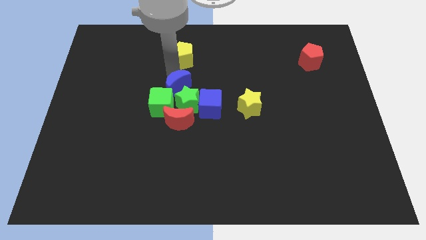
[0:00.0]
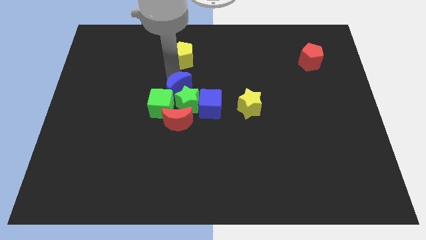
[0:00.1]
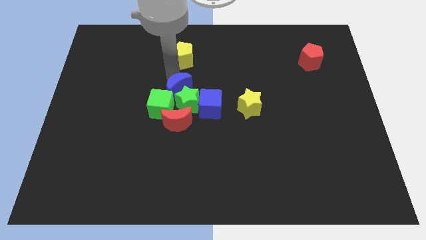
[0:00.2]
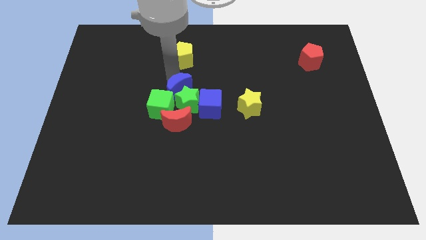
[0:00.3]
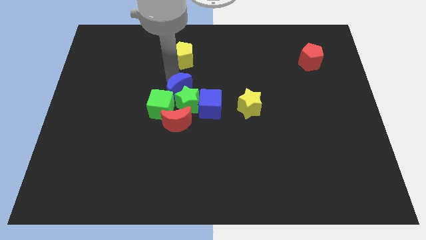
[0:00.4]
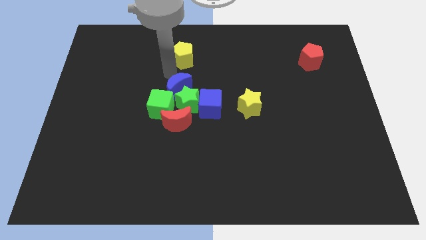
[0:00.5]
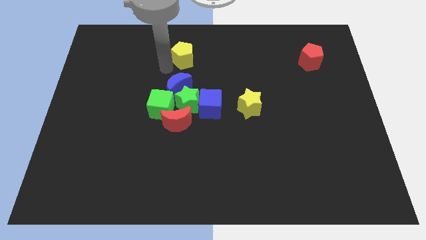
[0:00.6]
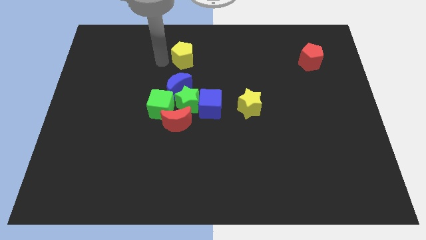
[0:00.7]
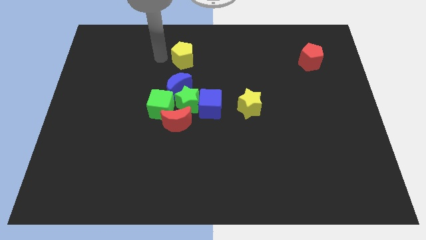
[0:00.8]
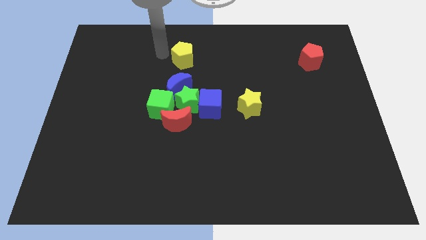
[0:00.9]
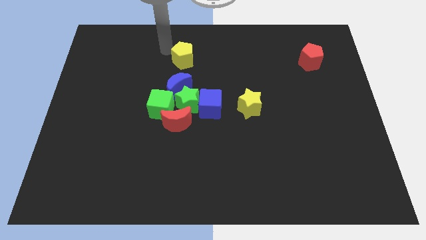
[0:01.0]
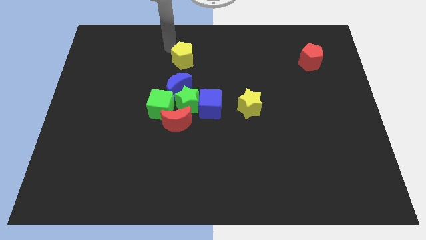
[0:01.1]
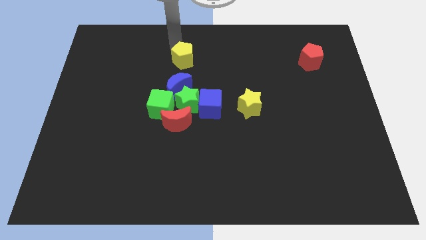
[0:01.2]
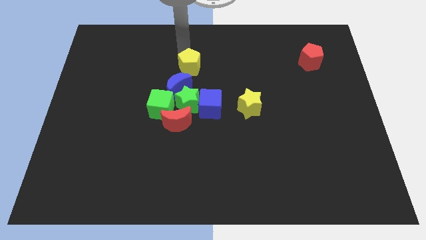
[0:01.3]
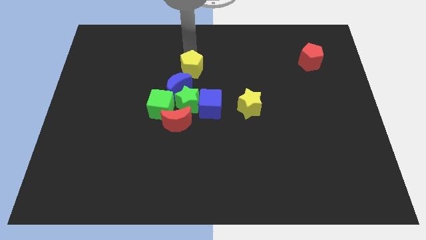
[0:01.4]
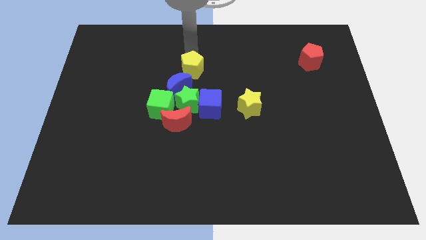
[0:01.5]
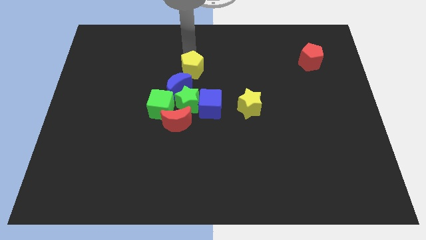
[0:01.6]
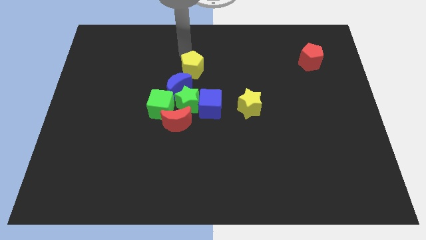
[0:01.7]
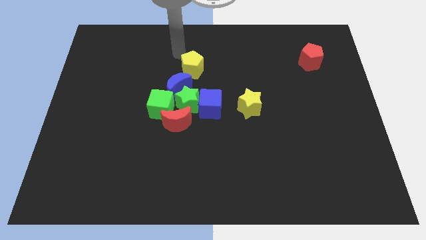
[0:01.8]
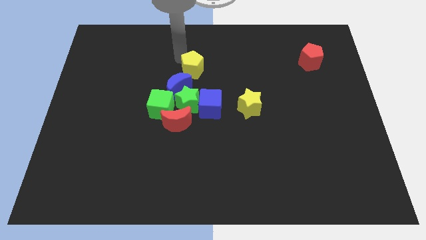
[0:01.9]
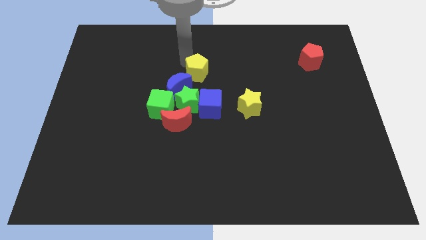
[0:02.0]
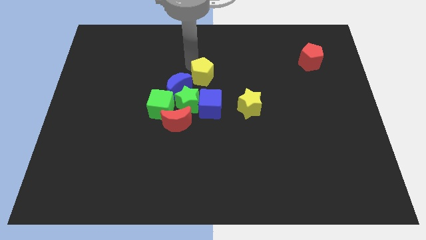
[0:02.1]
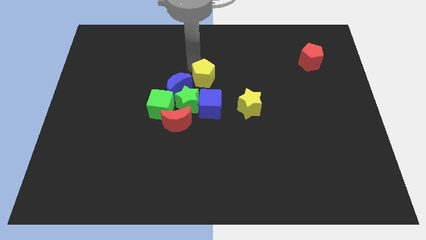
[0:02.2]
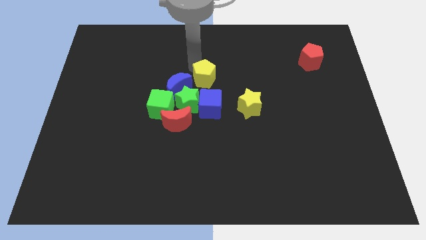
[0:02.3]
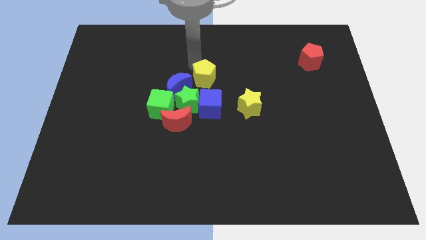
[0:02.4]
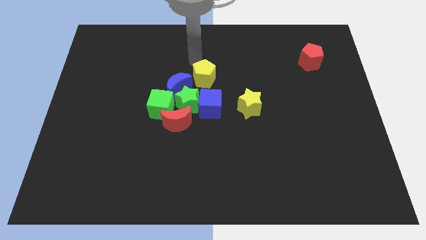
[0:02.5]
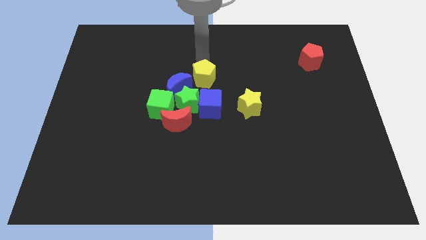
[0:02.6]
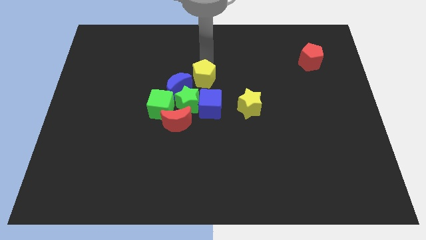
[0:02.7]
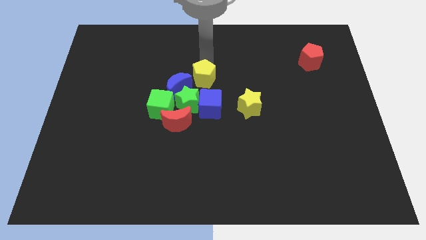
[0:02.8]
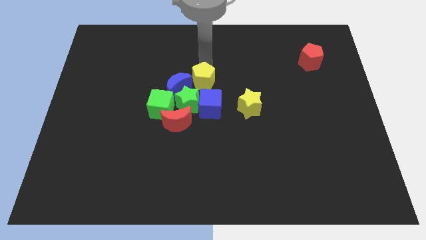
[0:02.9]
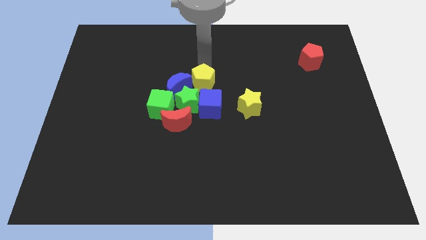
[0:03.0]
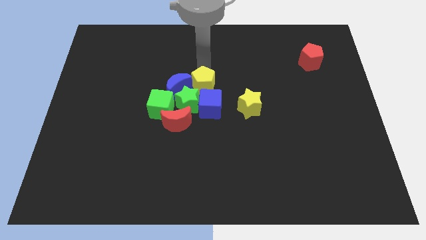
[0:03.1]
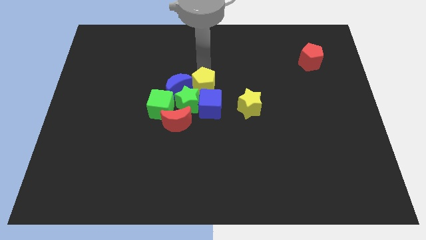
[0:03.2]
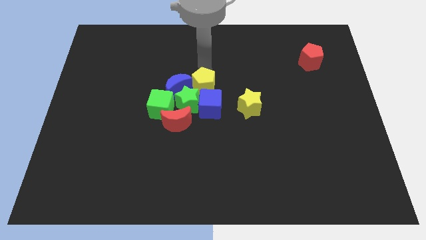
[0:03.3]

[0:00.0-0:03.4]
move the yellow pentagon to the top of blue cube

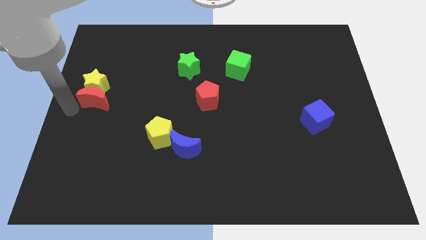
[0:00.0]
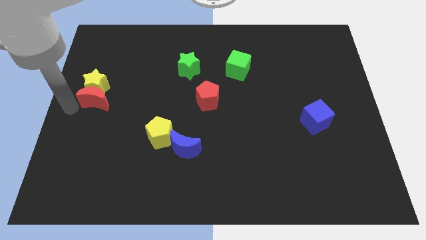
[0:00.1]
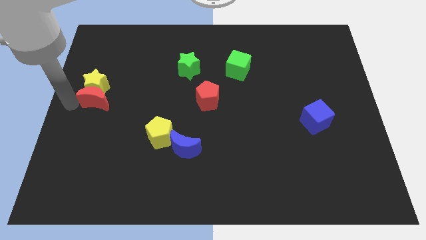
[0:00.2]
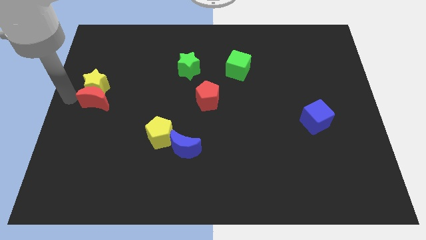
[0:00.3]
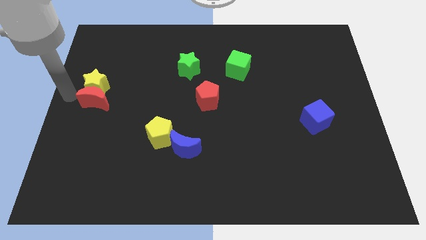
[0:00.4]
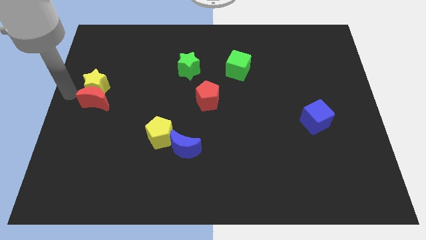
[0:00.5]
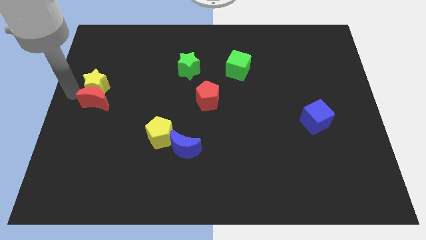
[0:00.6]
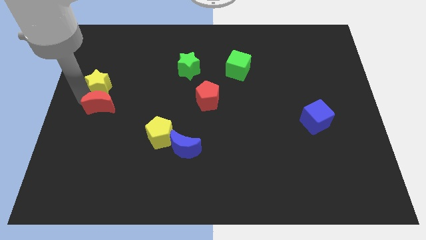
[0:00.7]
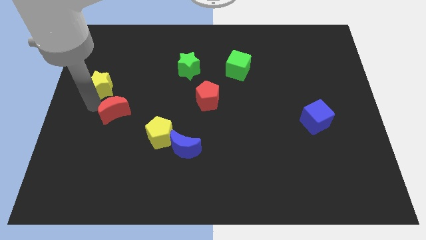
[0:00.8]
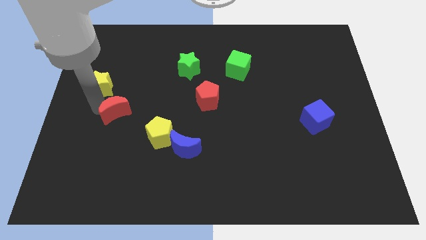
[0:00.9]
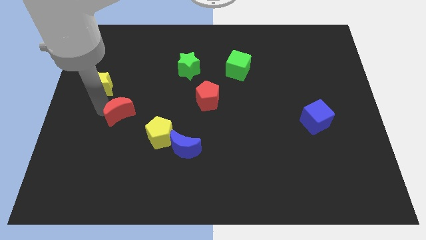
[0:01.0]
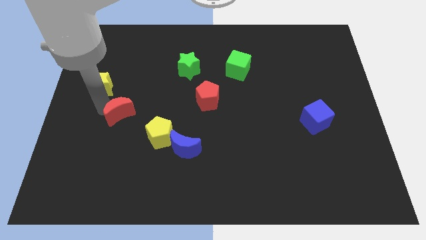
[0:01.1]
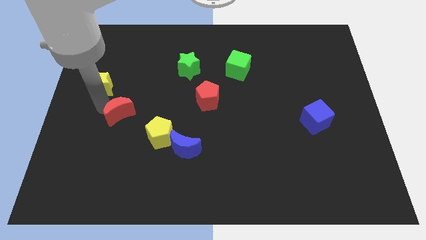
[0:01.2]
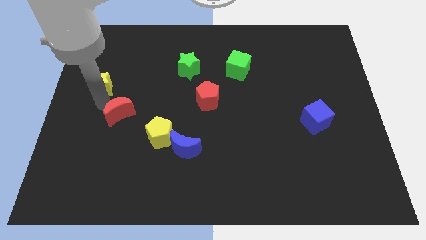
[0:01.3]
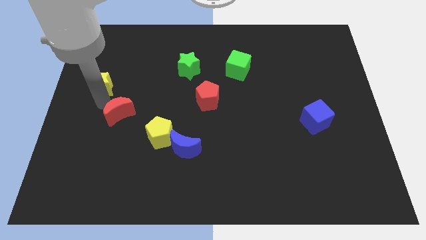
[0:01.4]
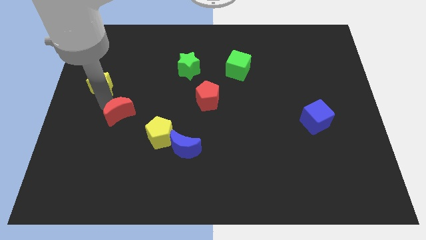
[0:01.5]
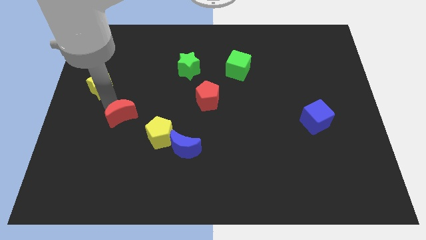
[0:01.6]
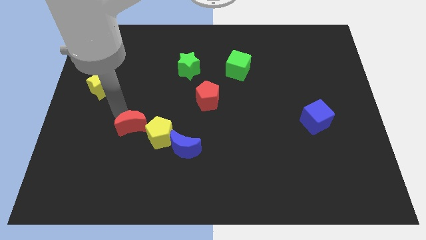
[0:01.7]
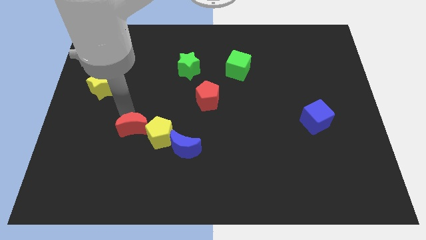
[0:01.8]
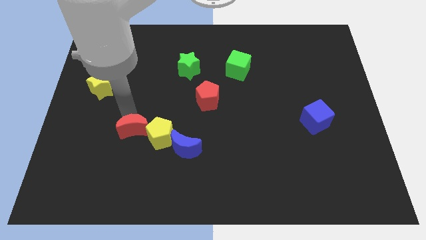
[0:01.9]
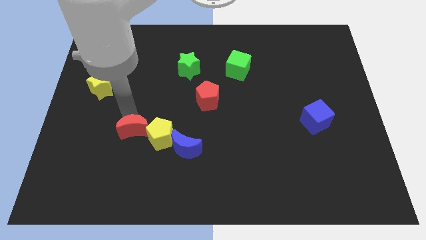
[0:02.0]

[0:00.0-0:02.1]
move the red moon to the top left side of the yellow pentagon

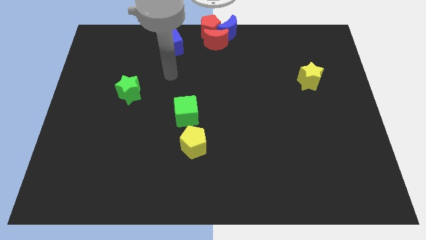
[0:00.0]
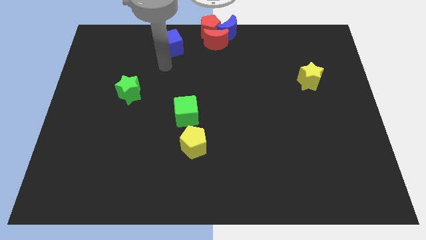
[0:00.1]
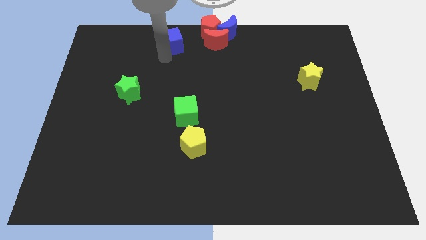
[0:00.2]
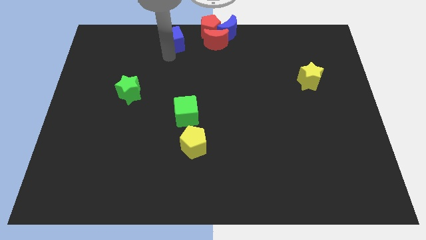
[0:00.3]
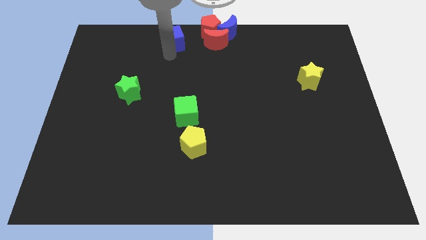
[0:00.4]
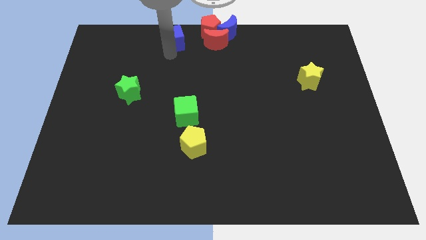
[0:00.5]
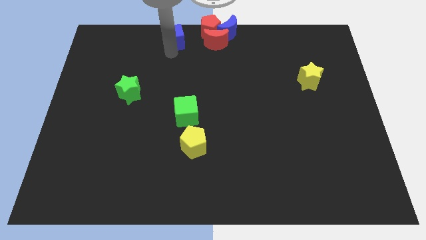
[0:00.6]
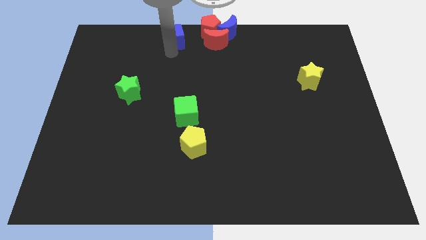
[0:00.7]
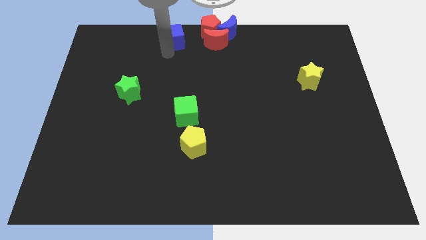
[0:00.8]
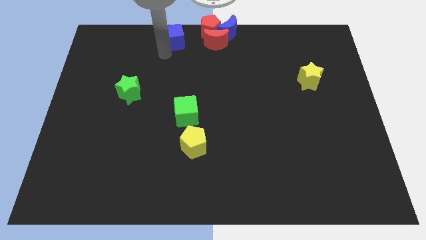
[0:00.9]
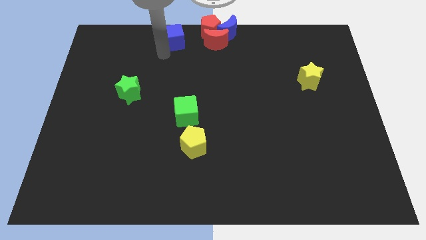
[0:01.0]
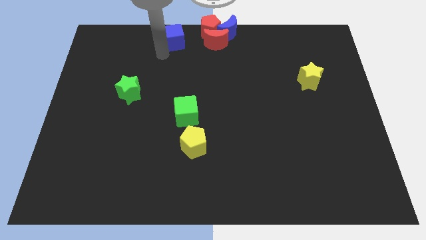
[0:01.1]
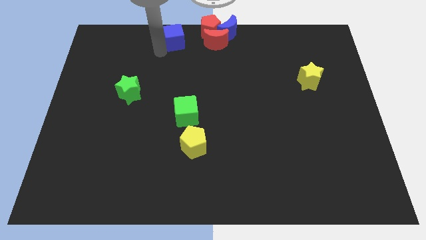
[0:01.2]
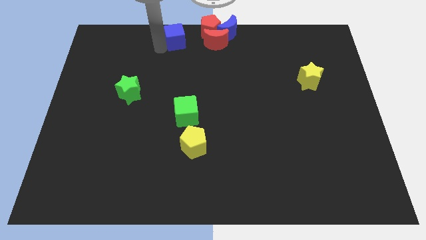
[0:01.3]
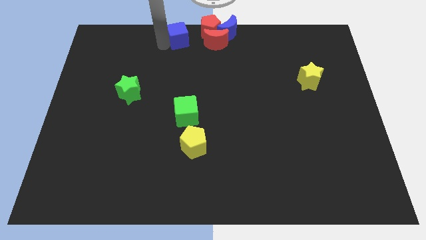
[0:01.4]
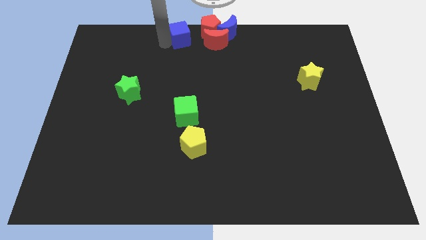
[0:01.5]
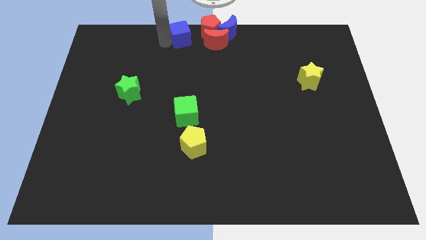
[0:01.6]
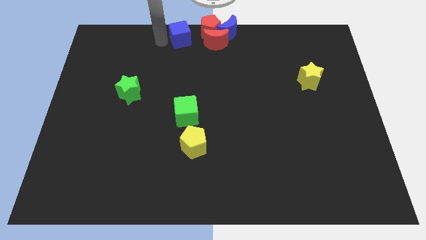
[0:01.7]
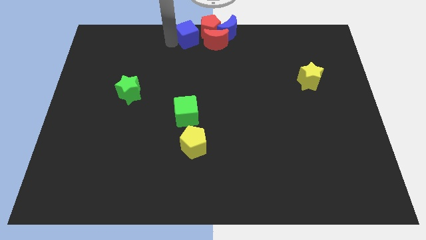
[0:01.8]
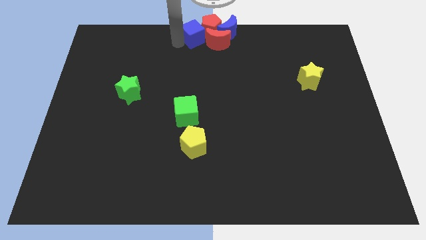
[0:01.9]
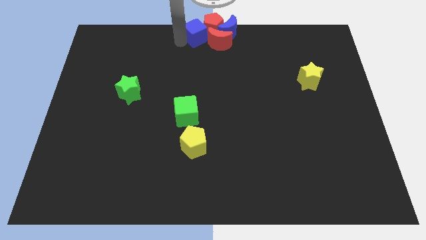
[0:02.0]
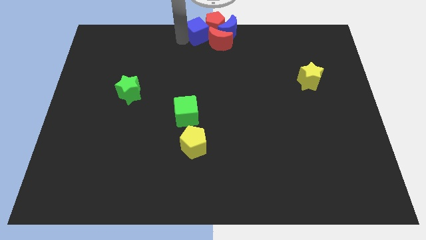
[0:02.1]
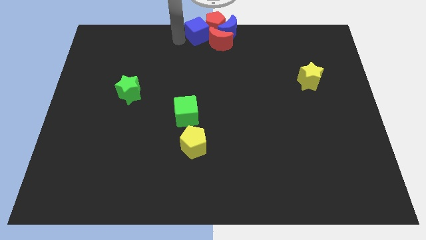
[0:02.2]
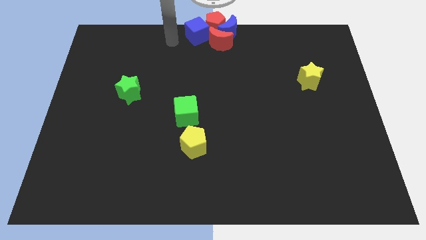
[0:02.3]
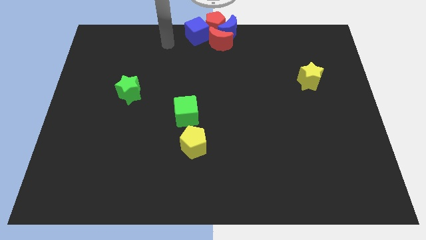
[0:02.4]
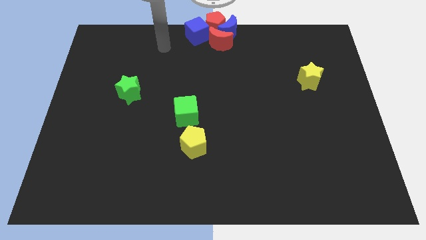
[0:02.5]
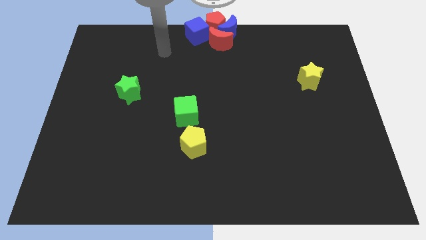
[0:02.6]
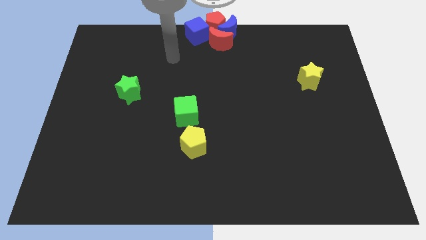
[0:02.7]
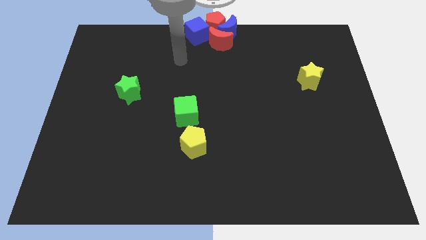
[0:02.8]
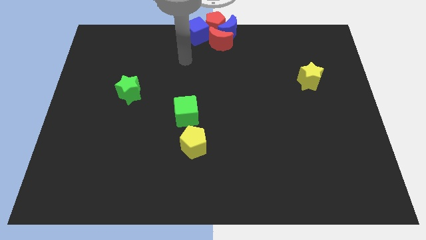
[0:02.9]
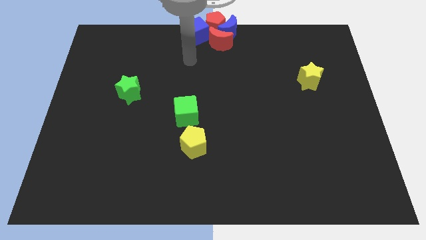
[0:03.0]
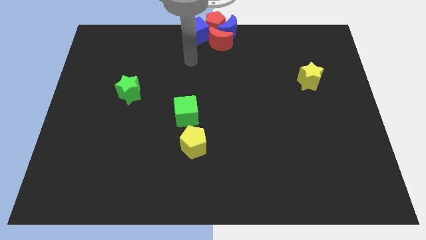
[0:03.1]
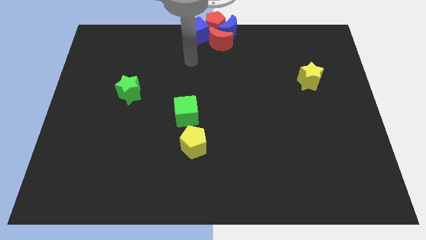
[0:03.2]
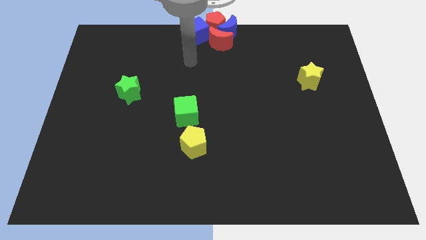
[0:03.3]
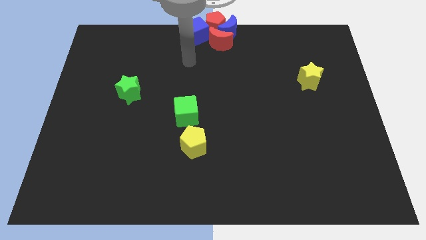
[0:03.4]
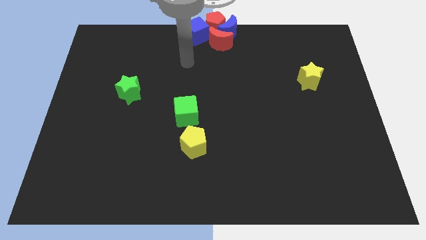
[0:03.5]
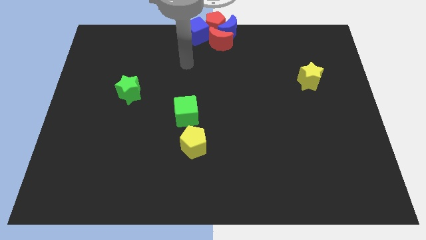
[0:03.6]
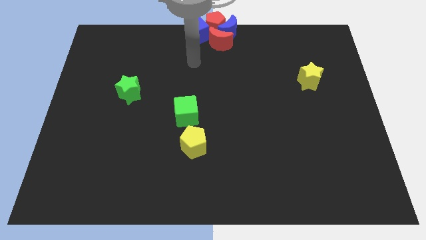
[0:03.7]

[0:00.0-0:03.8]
push the blue cube into the group of blocks
